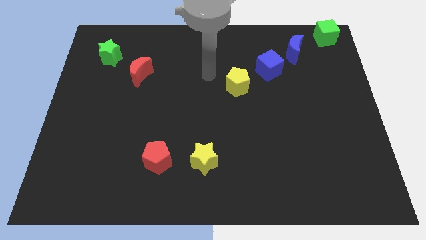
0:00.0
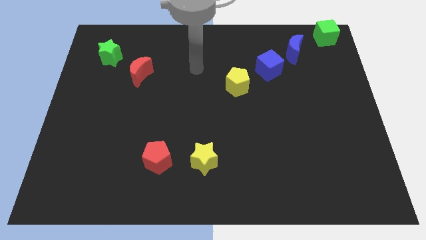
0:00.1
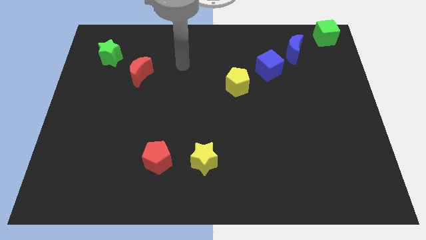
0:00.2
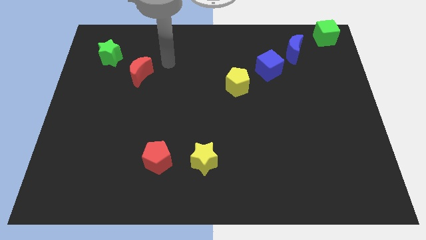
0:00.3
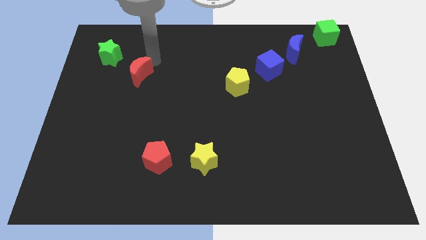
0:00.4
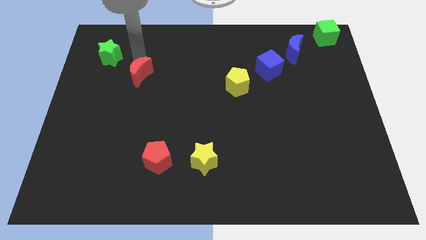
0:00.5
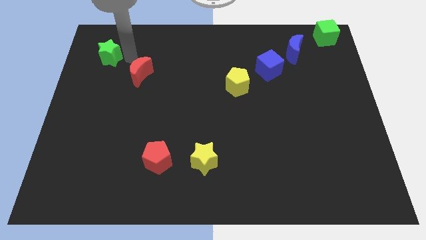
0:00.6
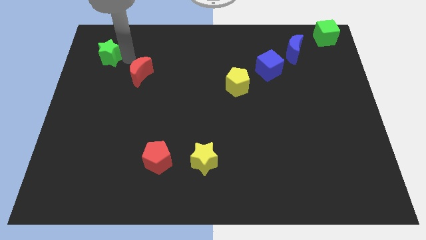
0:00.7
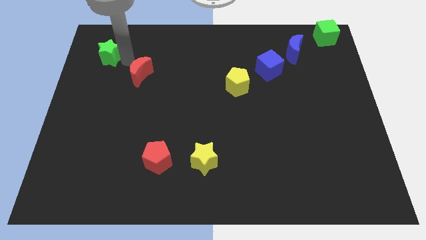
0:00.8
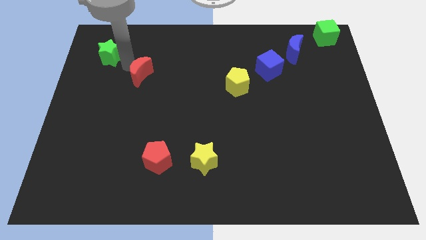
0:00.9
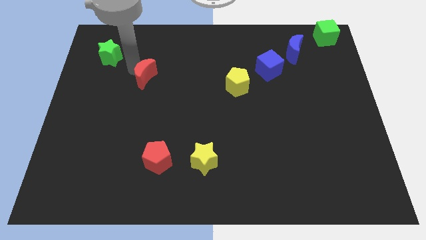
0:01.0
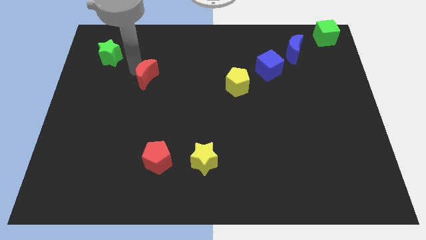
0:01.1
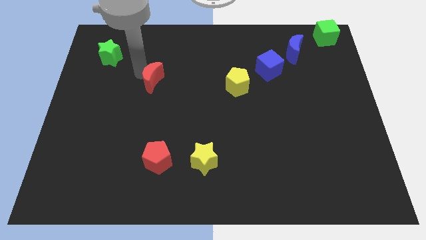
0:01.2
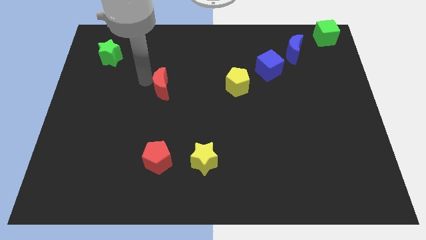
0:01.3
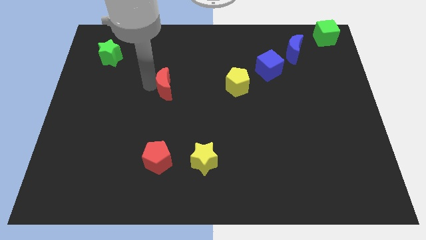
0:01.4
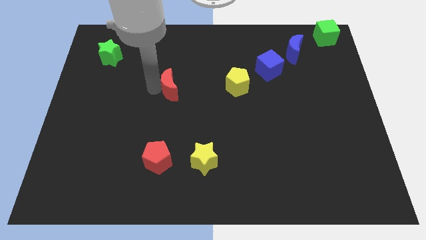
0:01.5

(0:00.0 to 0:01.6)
push the red moon to the left of the yellow pentagon

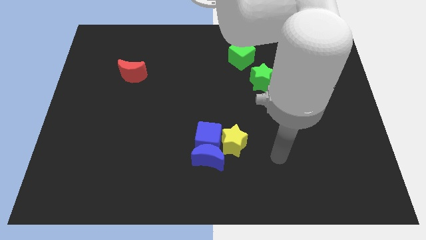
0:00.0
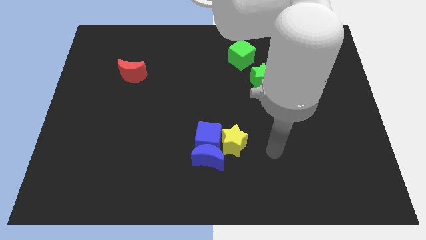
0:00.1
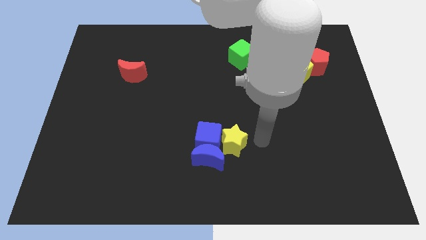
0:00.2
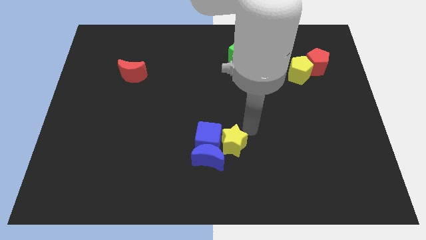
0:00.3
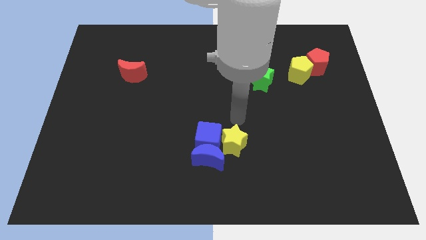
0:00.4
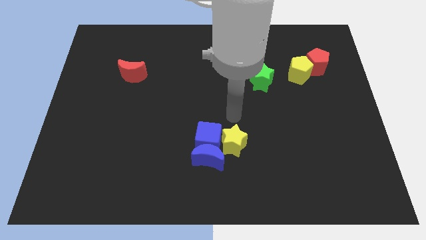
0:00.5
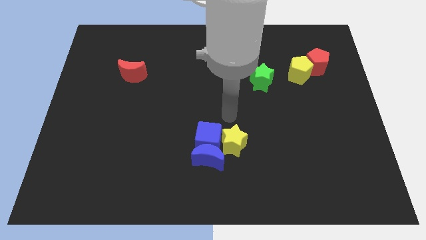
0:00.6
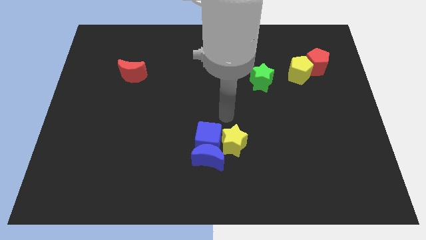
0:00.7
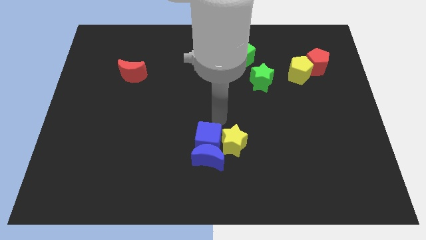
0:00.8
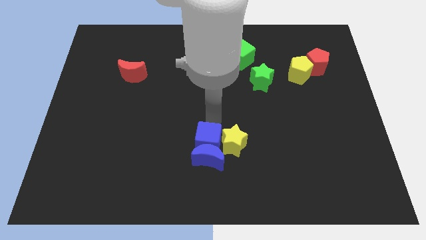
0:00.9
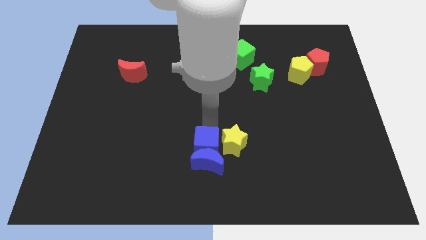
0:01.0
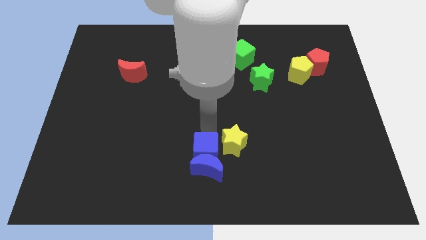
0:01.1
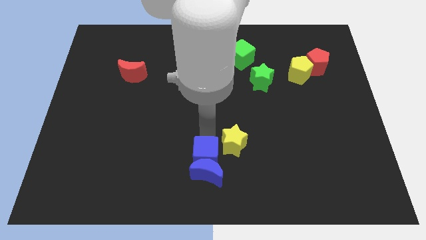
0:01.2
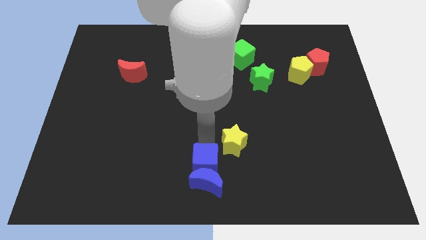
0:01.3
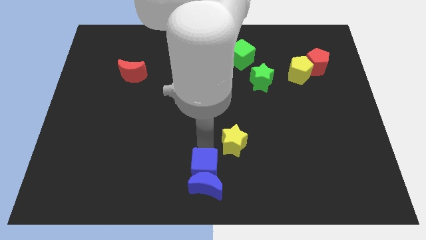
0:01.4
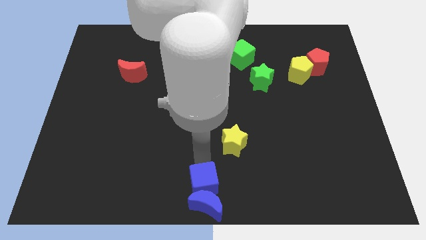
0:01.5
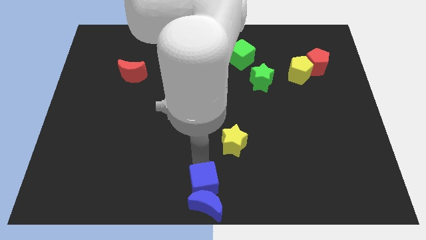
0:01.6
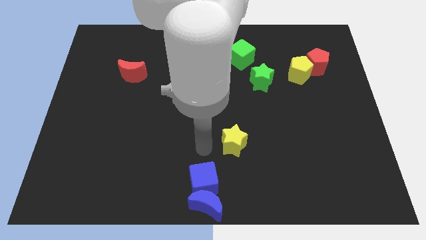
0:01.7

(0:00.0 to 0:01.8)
place the group of blue blocks at bottom center of the board

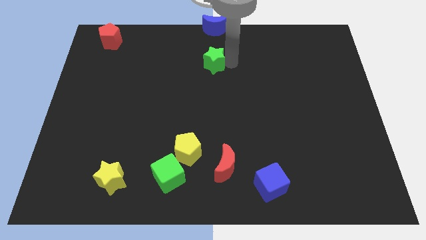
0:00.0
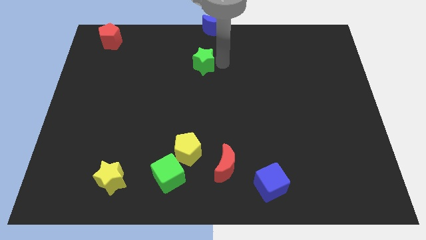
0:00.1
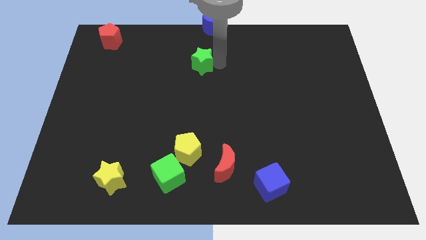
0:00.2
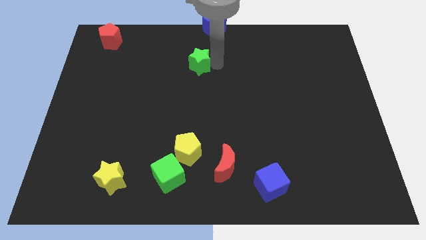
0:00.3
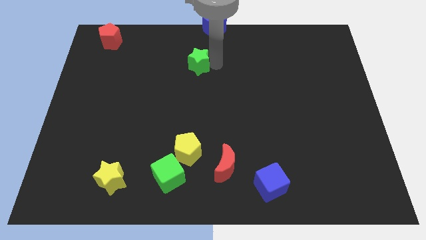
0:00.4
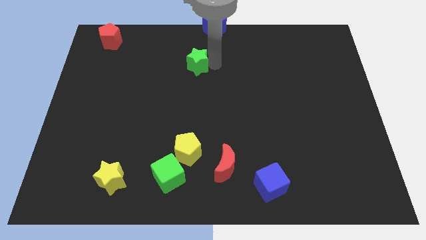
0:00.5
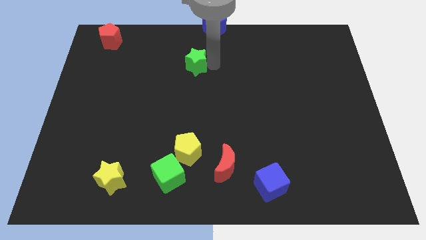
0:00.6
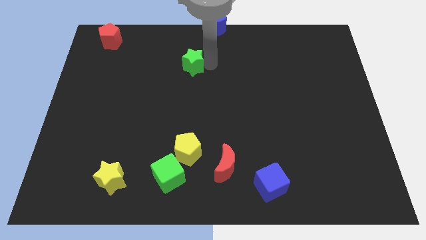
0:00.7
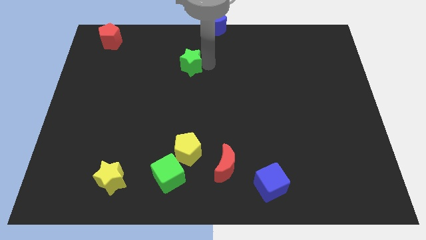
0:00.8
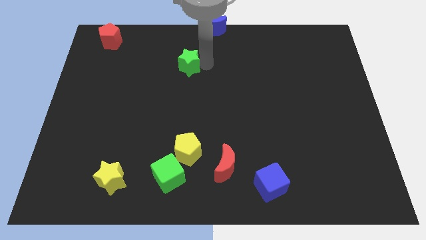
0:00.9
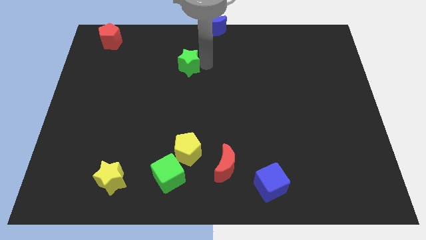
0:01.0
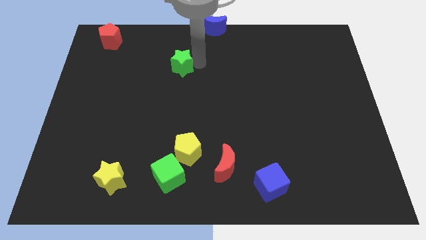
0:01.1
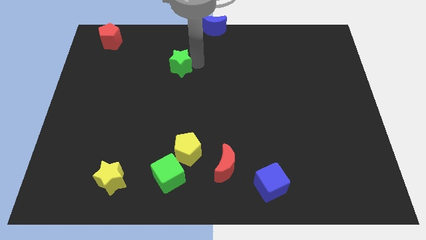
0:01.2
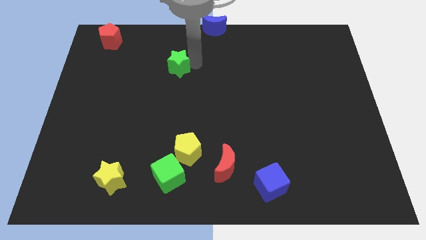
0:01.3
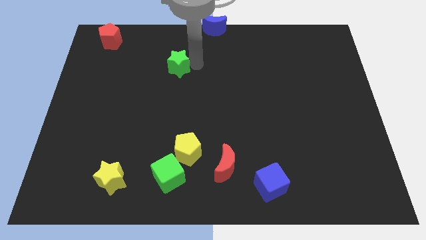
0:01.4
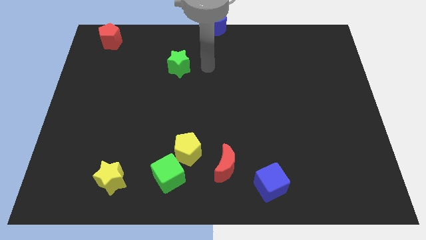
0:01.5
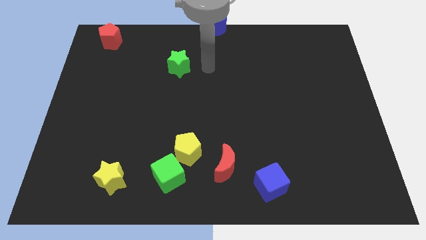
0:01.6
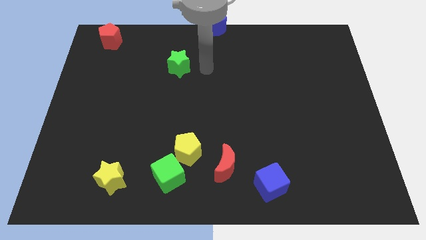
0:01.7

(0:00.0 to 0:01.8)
place the green star diagonal to the blue moon

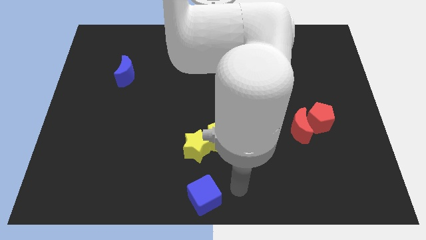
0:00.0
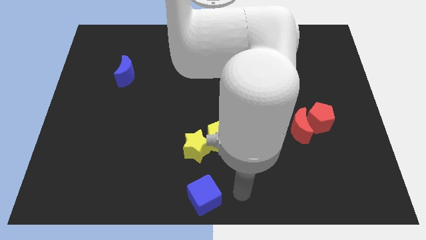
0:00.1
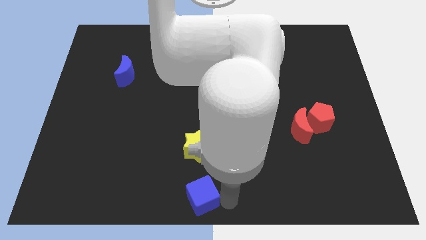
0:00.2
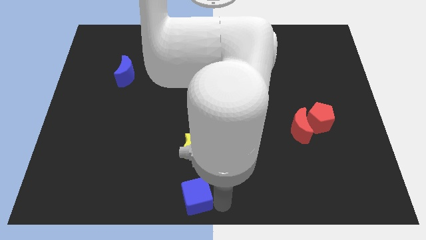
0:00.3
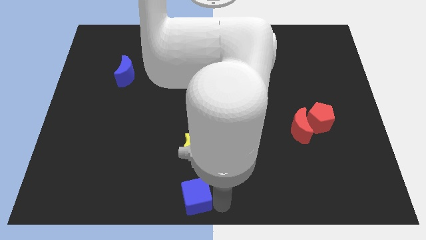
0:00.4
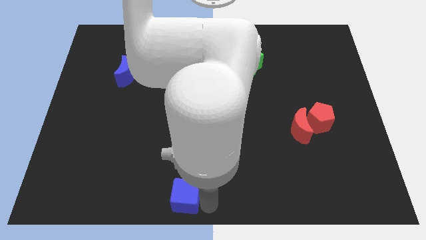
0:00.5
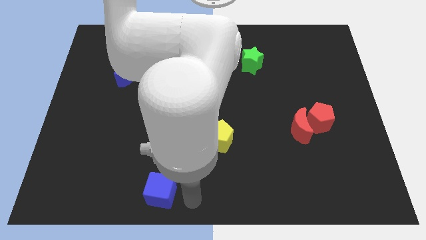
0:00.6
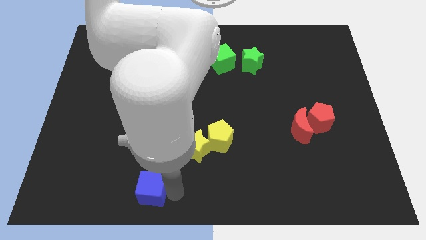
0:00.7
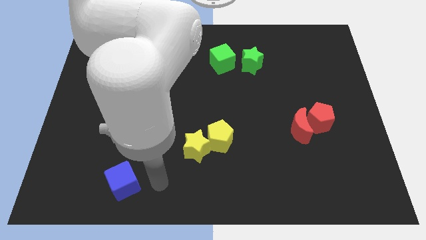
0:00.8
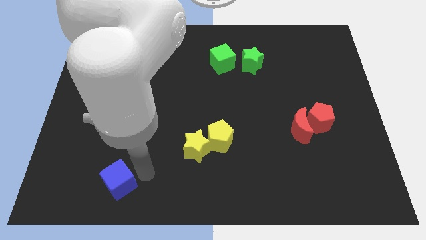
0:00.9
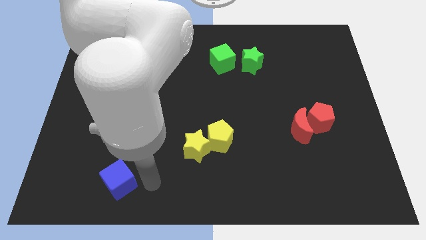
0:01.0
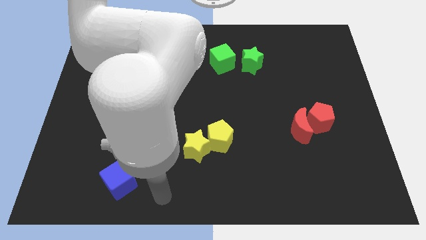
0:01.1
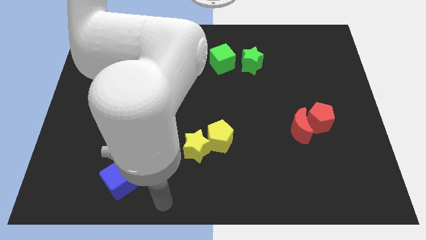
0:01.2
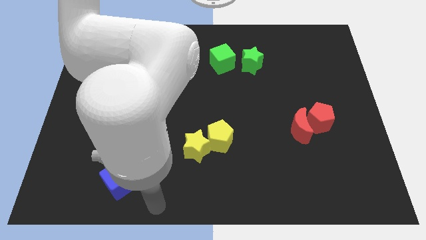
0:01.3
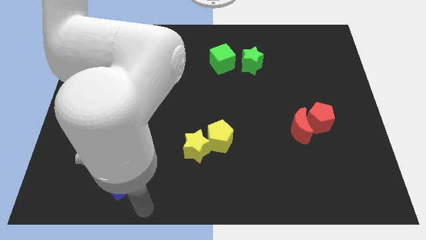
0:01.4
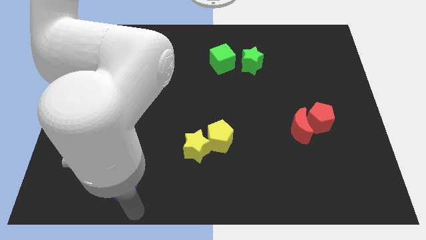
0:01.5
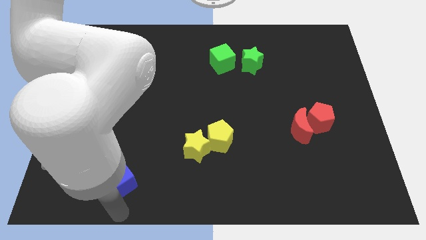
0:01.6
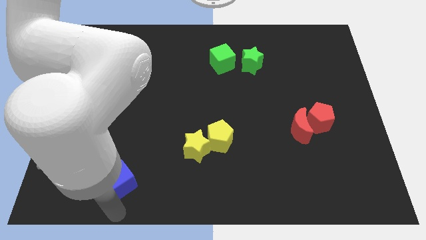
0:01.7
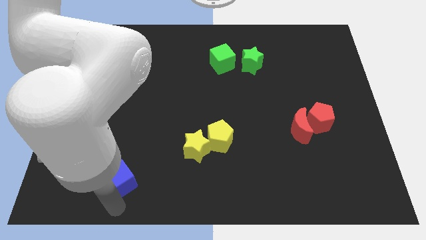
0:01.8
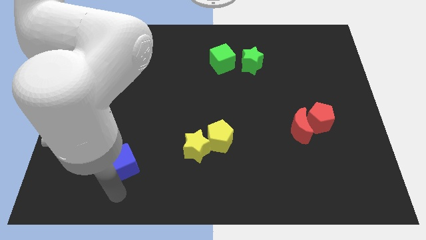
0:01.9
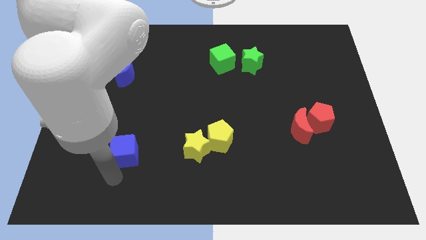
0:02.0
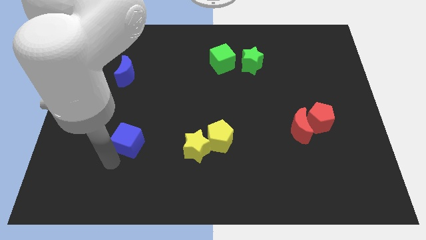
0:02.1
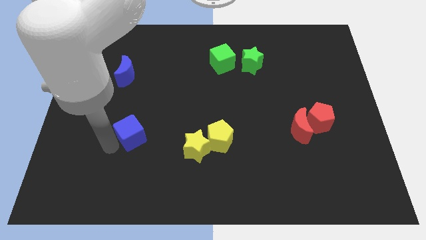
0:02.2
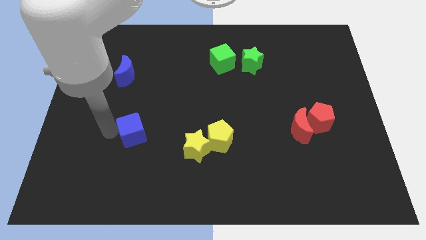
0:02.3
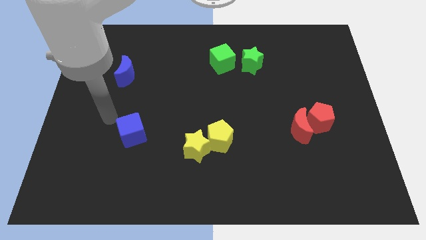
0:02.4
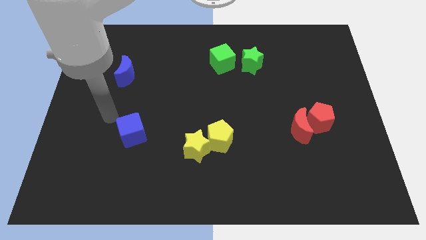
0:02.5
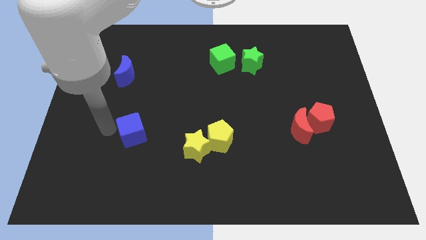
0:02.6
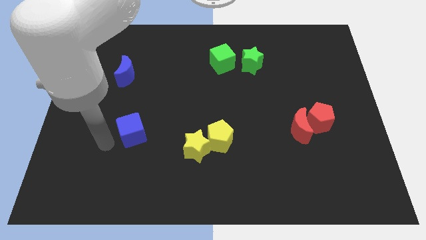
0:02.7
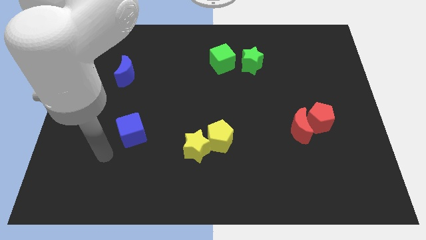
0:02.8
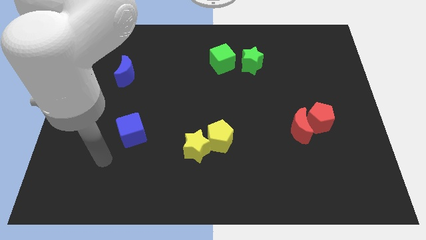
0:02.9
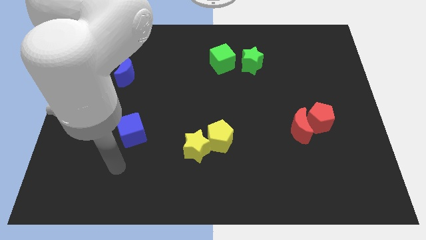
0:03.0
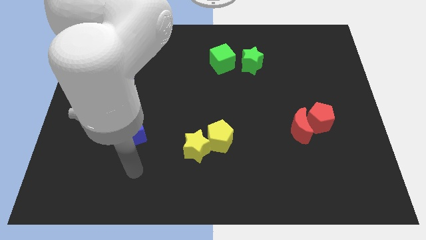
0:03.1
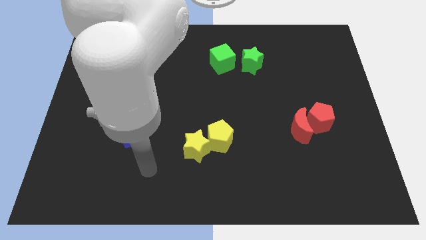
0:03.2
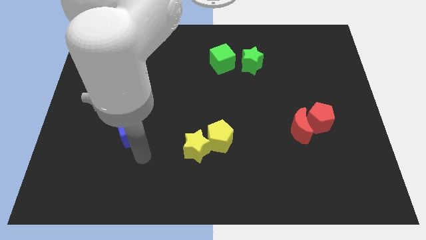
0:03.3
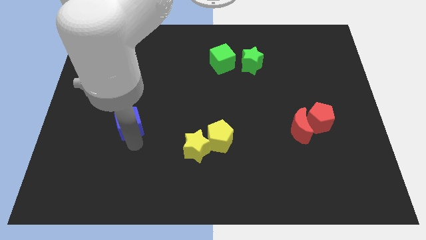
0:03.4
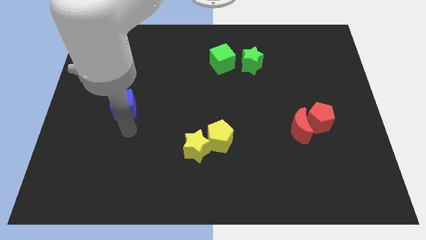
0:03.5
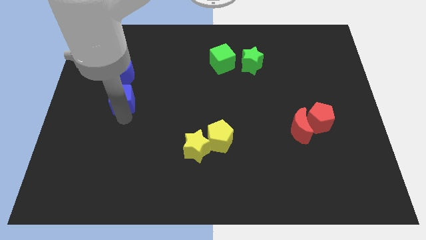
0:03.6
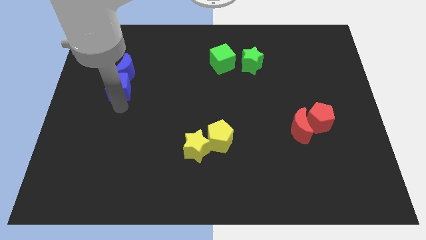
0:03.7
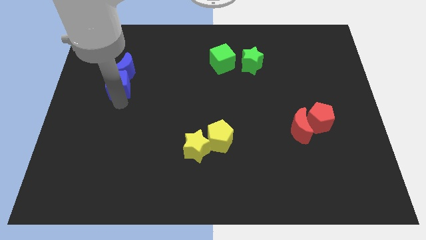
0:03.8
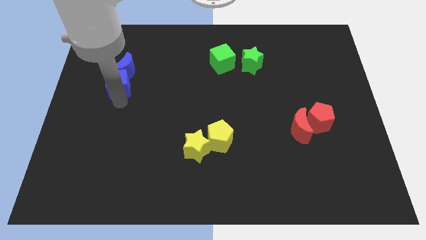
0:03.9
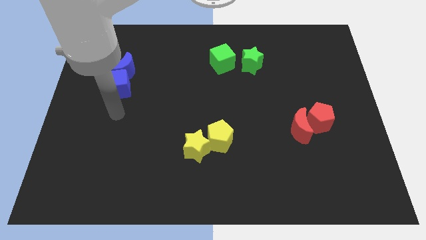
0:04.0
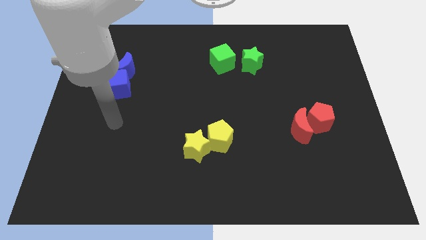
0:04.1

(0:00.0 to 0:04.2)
move blue cube into blue moon
